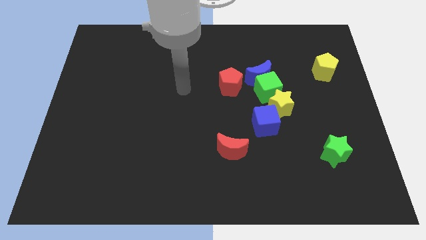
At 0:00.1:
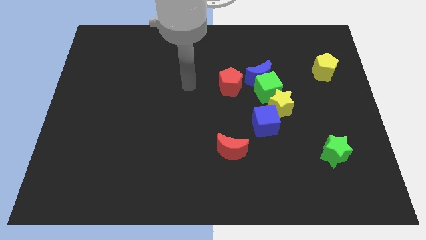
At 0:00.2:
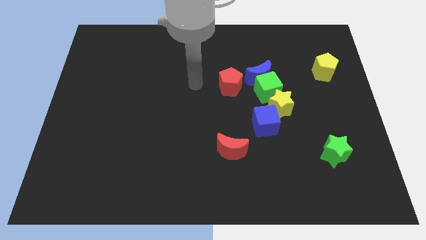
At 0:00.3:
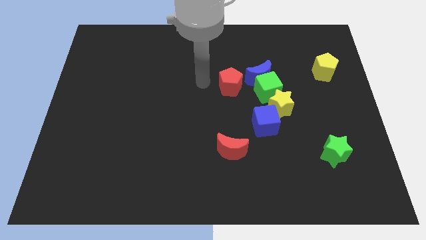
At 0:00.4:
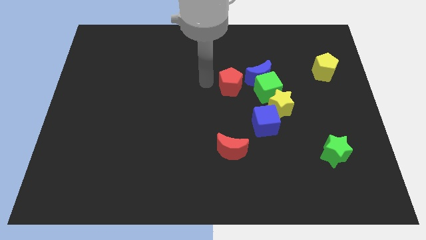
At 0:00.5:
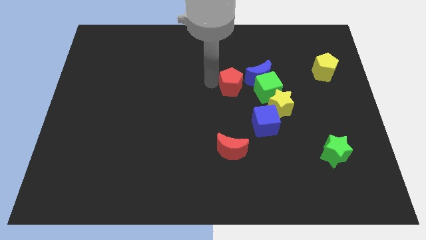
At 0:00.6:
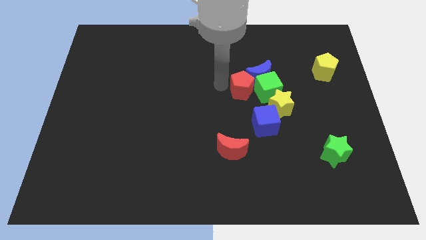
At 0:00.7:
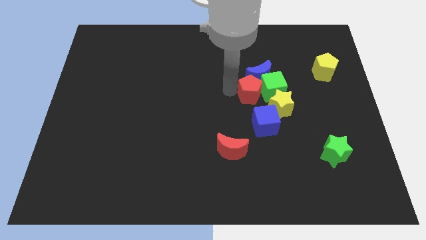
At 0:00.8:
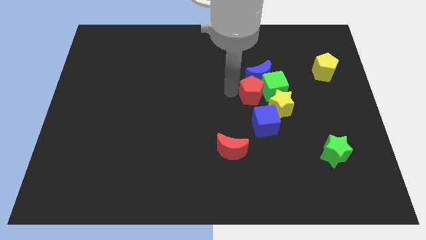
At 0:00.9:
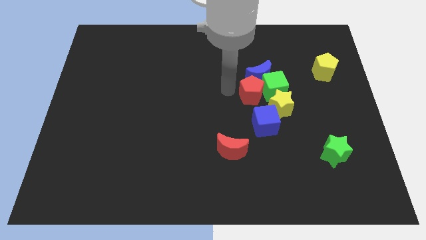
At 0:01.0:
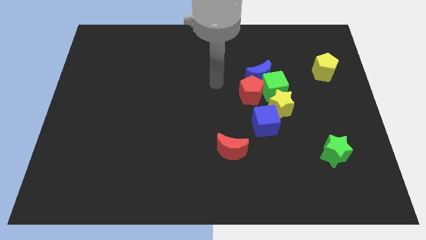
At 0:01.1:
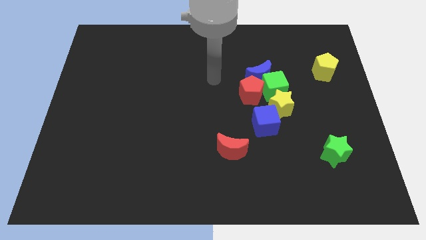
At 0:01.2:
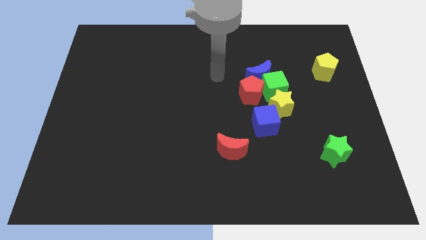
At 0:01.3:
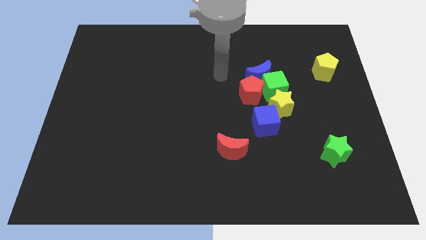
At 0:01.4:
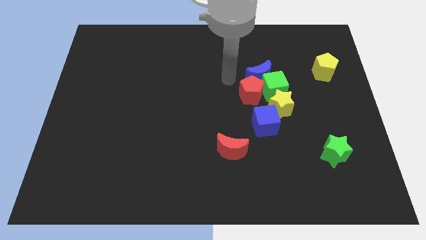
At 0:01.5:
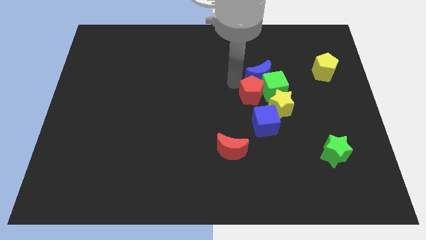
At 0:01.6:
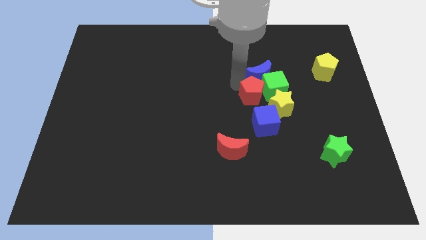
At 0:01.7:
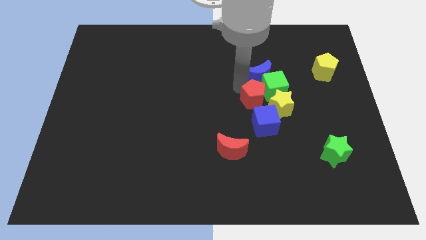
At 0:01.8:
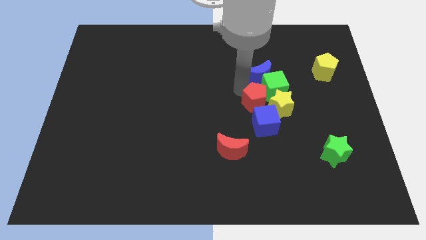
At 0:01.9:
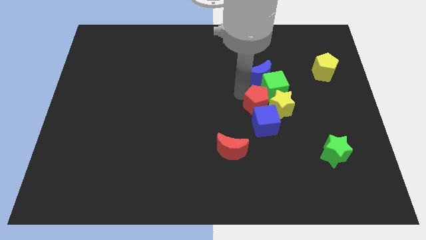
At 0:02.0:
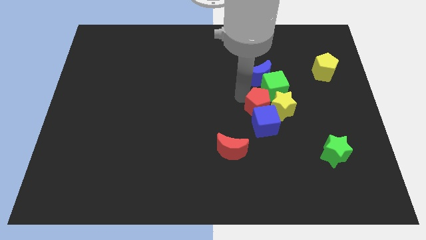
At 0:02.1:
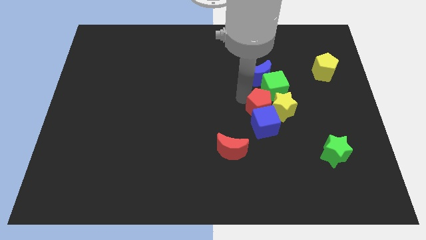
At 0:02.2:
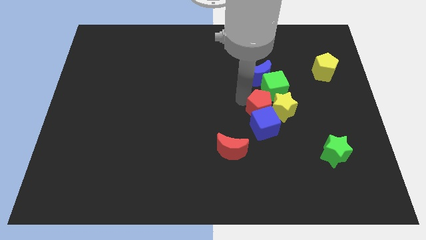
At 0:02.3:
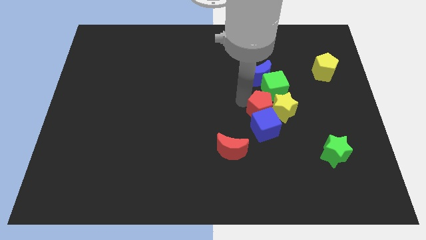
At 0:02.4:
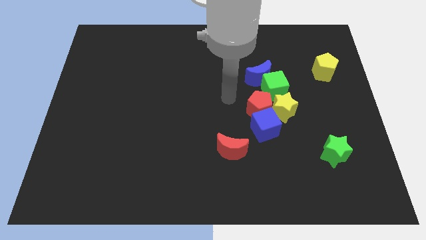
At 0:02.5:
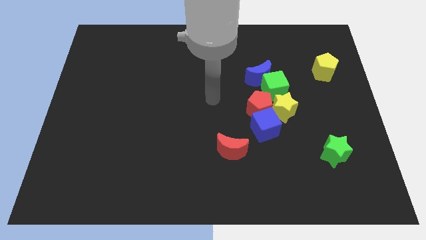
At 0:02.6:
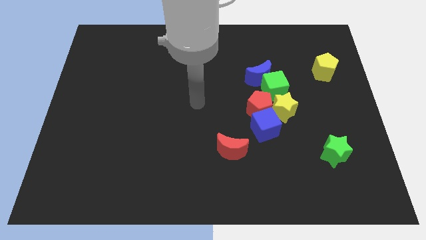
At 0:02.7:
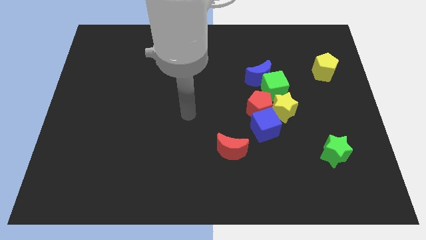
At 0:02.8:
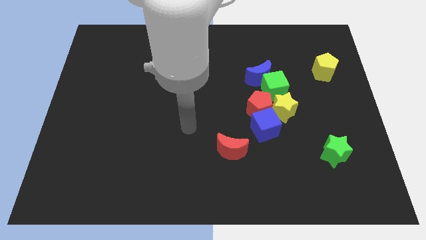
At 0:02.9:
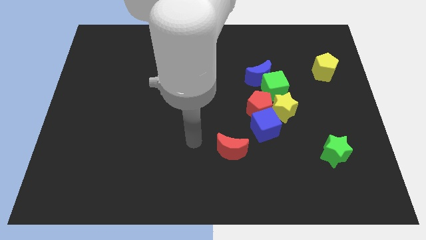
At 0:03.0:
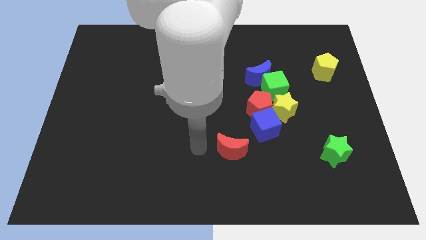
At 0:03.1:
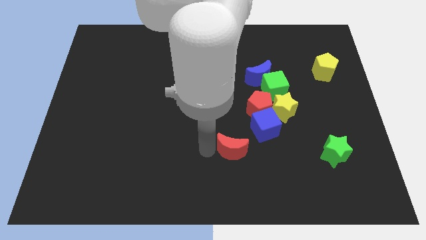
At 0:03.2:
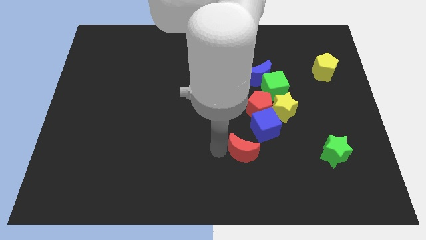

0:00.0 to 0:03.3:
place the red pentagon vertically above the blue cube

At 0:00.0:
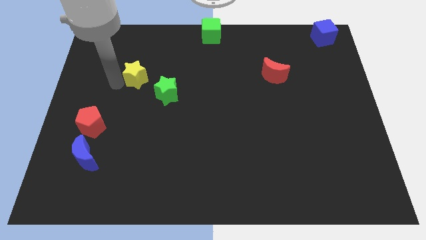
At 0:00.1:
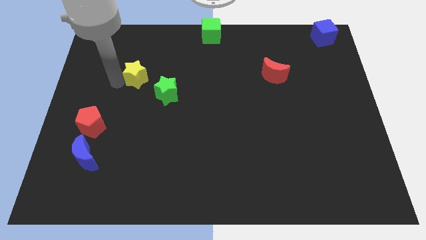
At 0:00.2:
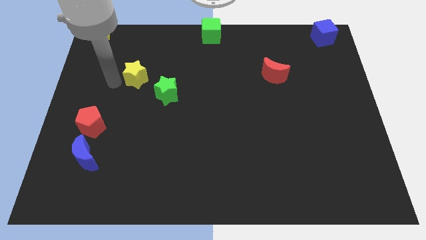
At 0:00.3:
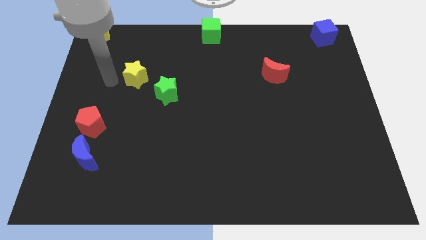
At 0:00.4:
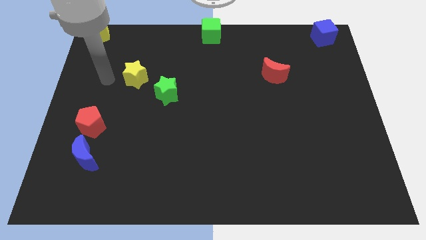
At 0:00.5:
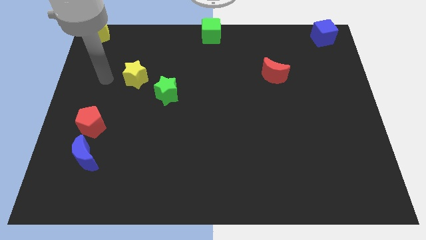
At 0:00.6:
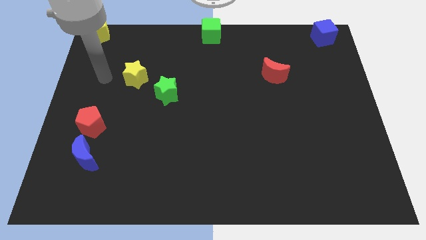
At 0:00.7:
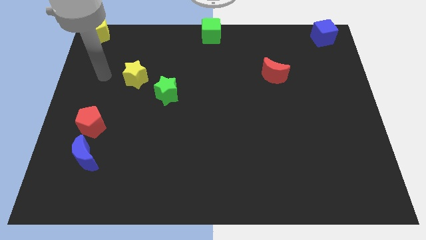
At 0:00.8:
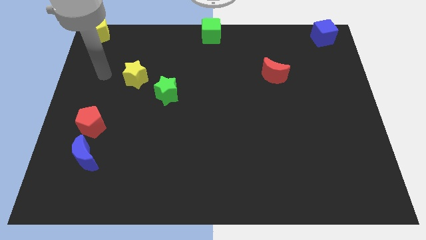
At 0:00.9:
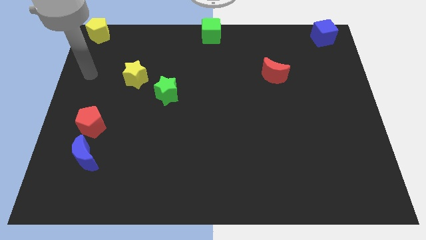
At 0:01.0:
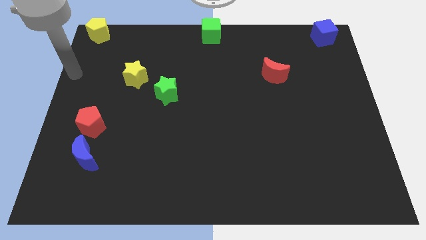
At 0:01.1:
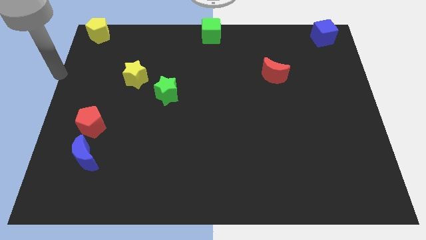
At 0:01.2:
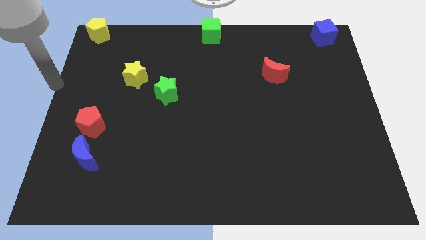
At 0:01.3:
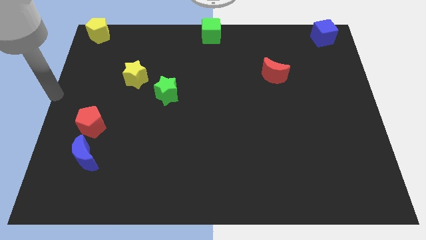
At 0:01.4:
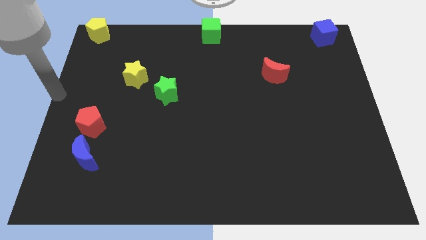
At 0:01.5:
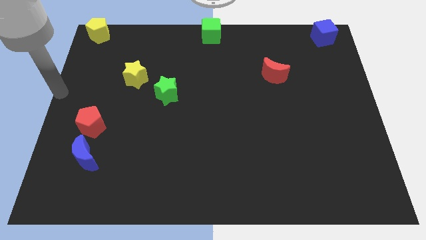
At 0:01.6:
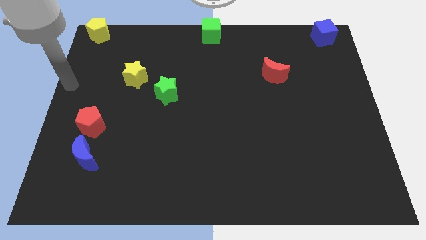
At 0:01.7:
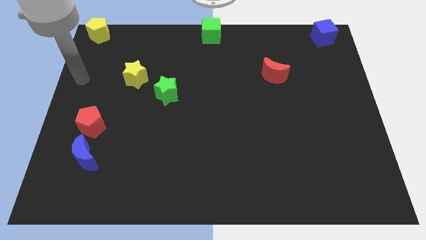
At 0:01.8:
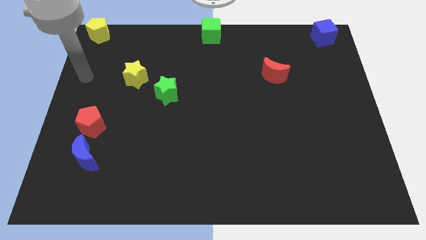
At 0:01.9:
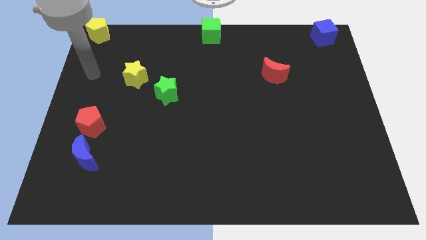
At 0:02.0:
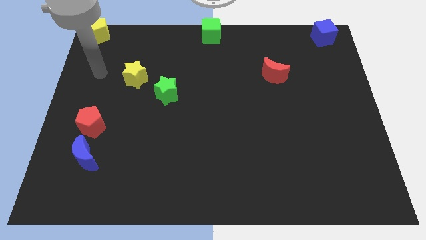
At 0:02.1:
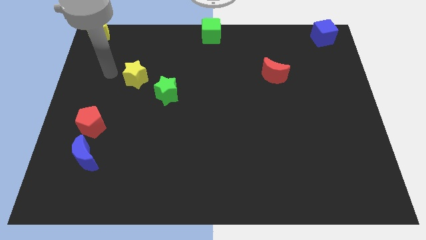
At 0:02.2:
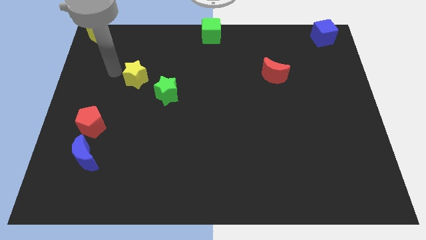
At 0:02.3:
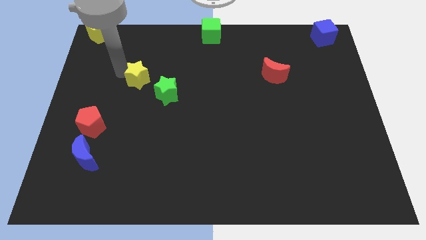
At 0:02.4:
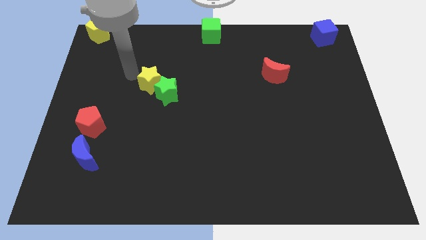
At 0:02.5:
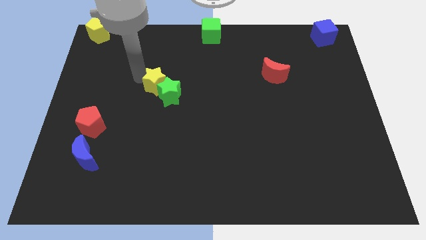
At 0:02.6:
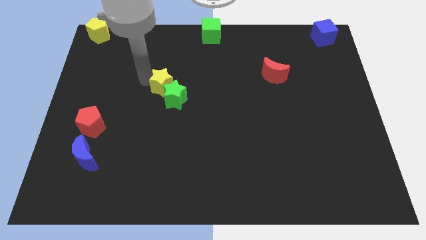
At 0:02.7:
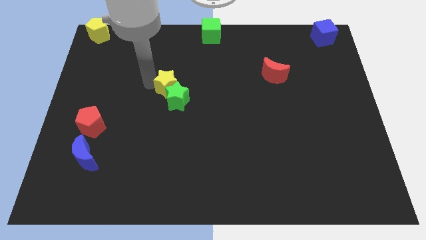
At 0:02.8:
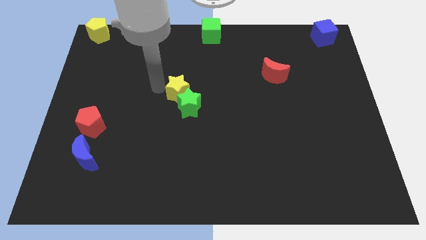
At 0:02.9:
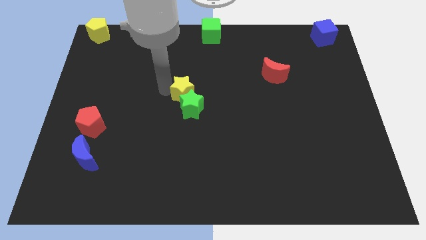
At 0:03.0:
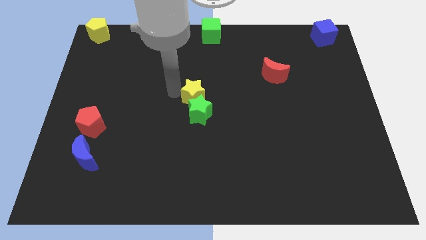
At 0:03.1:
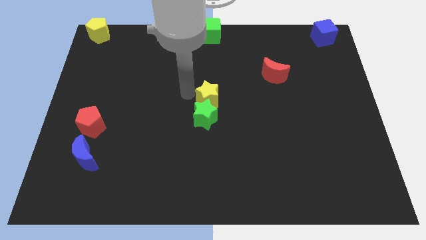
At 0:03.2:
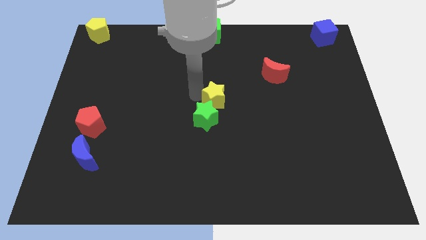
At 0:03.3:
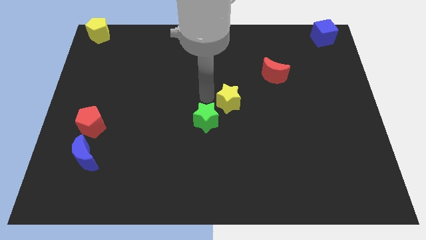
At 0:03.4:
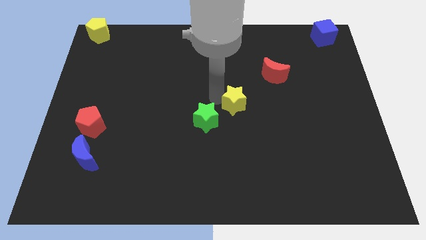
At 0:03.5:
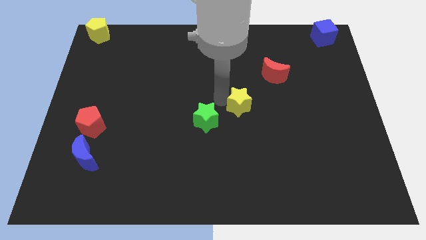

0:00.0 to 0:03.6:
drag the yellow star slightly to right

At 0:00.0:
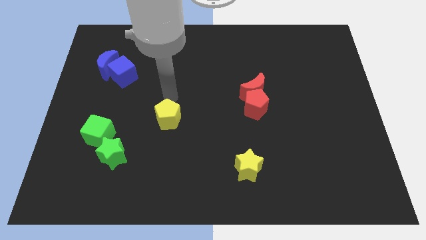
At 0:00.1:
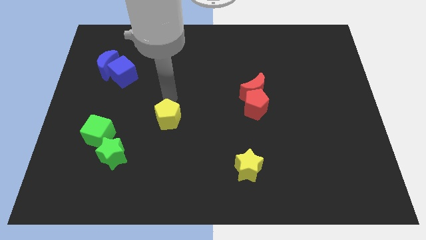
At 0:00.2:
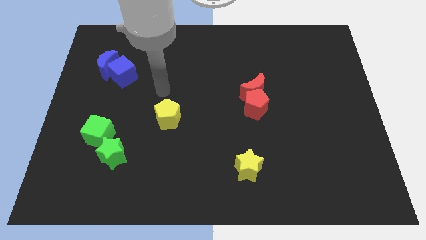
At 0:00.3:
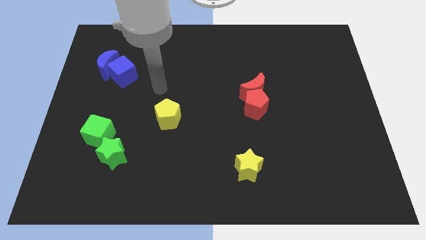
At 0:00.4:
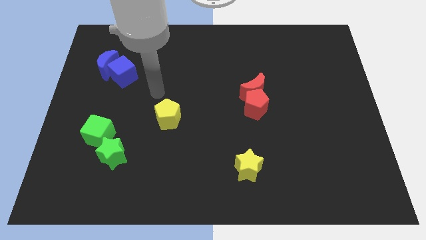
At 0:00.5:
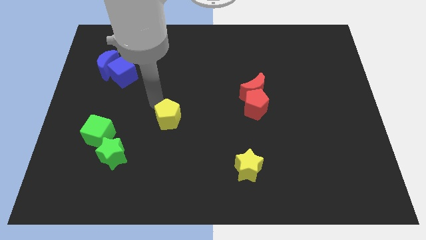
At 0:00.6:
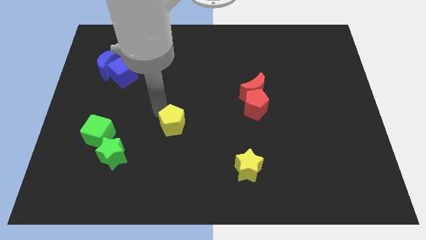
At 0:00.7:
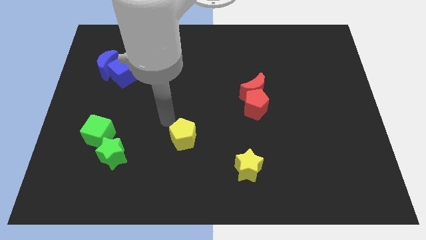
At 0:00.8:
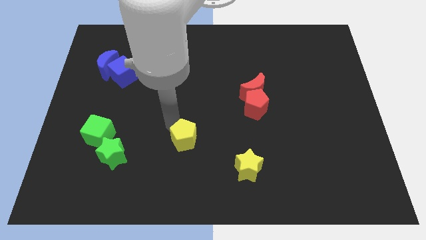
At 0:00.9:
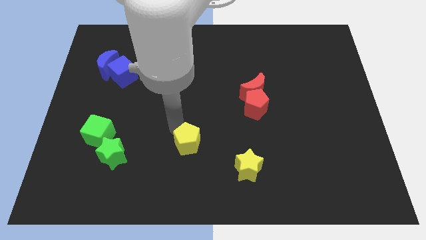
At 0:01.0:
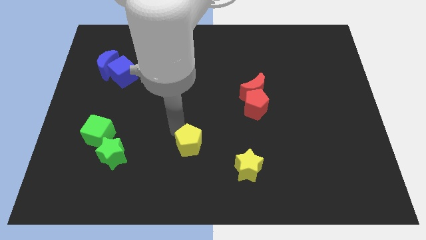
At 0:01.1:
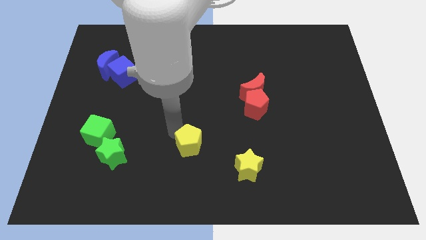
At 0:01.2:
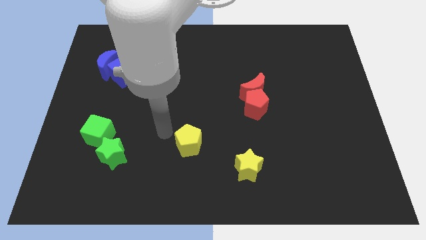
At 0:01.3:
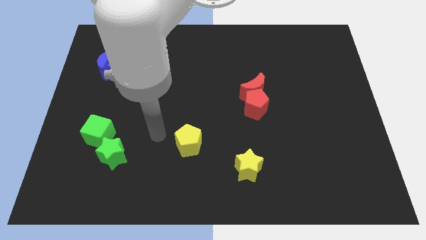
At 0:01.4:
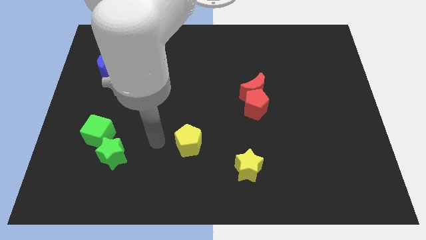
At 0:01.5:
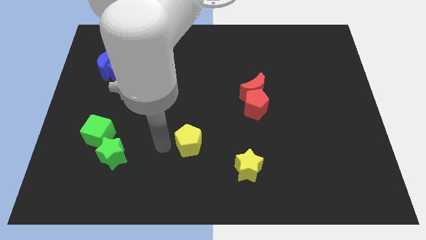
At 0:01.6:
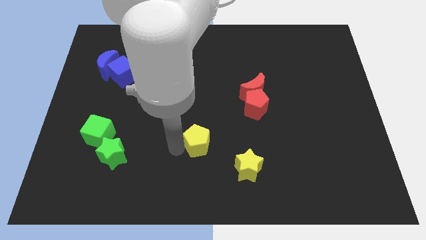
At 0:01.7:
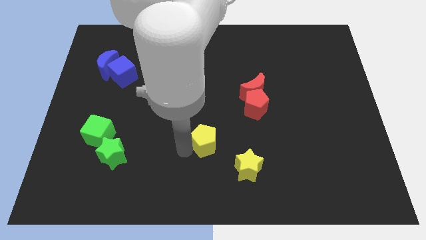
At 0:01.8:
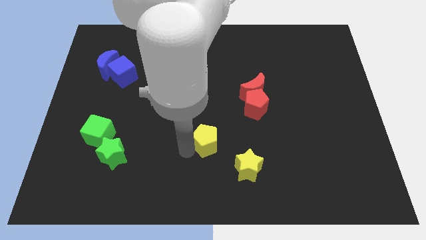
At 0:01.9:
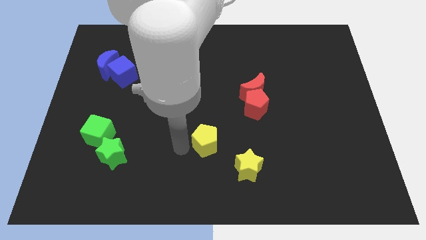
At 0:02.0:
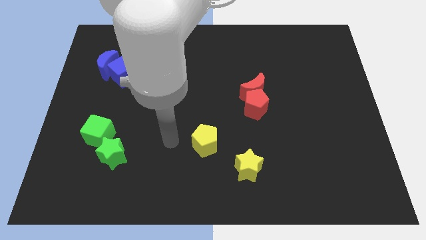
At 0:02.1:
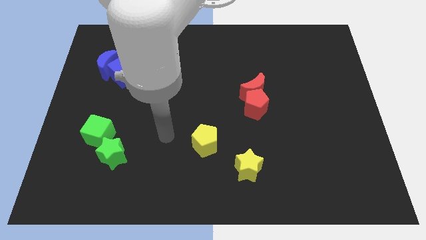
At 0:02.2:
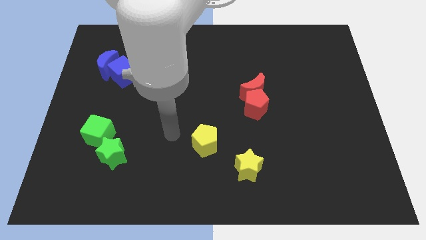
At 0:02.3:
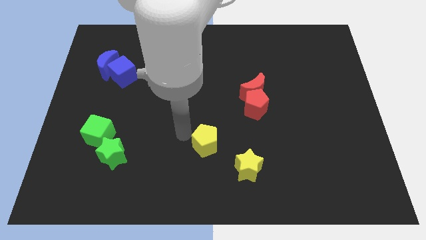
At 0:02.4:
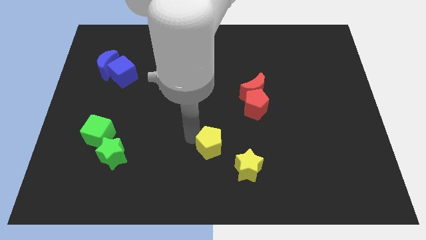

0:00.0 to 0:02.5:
place the yellow pentagon diagonally to blue cube
